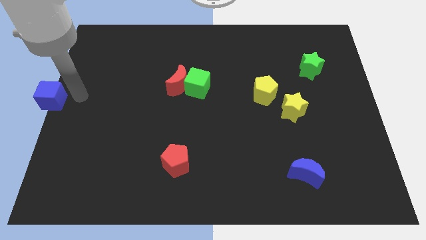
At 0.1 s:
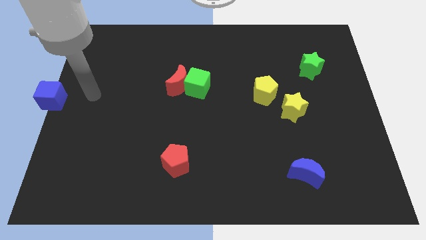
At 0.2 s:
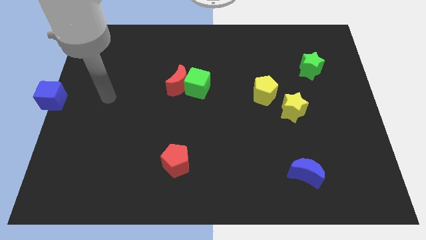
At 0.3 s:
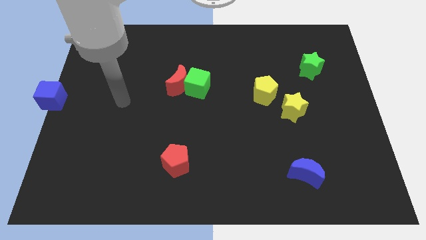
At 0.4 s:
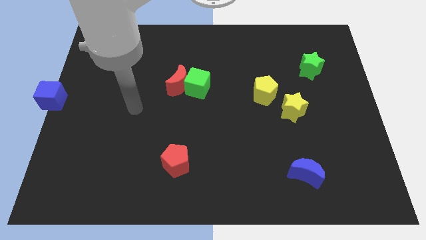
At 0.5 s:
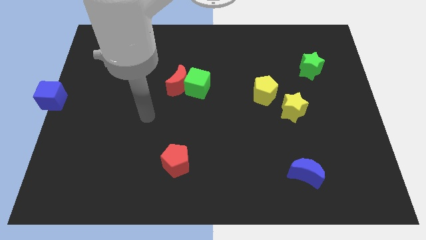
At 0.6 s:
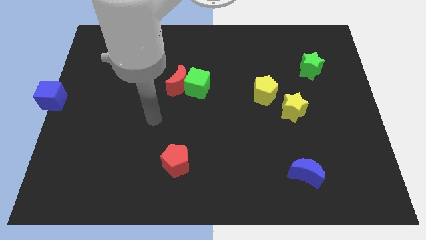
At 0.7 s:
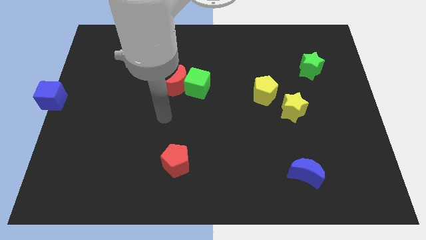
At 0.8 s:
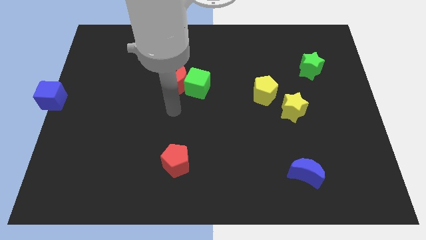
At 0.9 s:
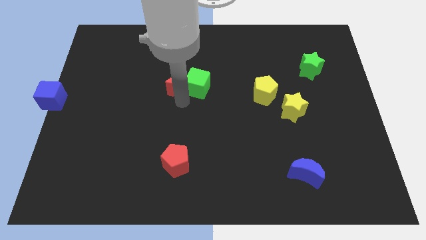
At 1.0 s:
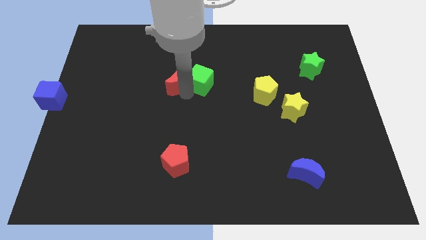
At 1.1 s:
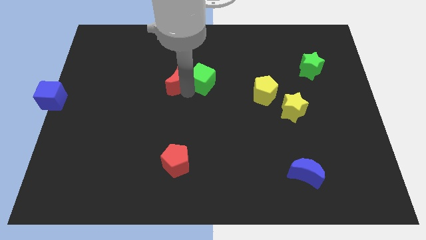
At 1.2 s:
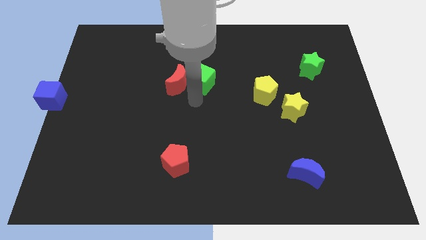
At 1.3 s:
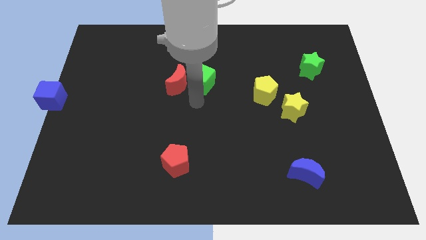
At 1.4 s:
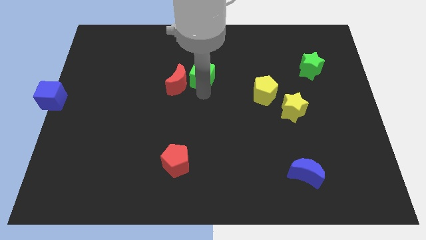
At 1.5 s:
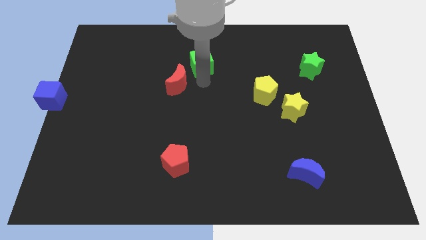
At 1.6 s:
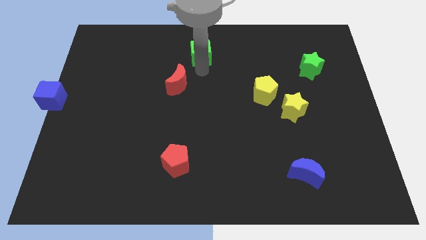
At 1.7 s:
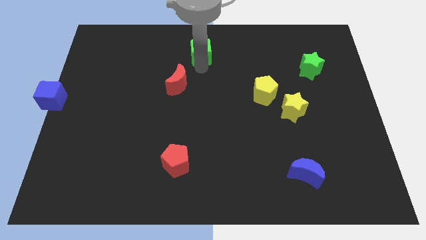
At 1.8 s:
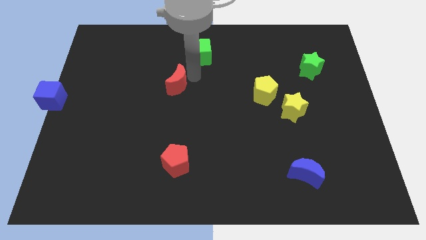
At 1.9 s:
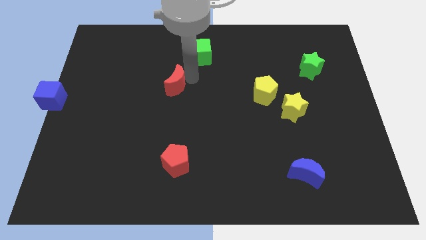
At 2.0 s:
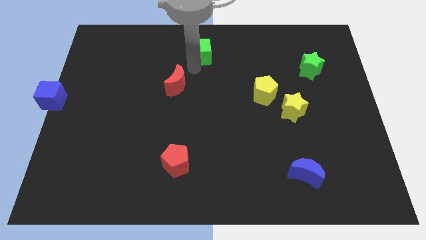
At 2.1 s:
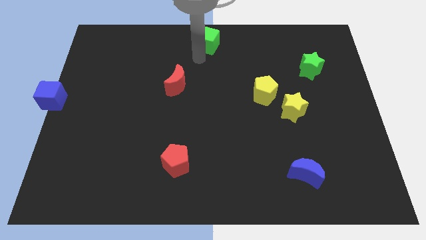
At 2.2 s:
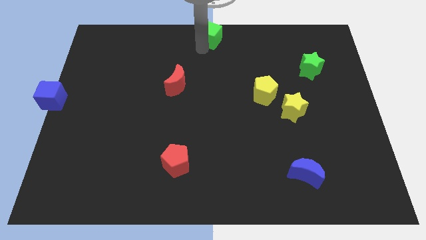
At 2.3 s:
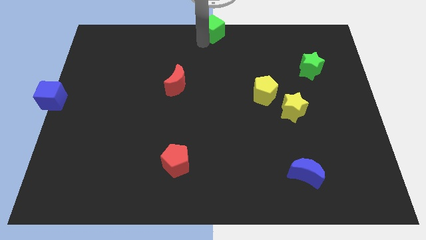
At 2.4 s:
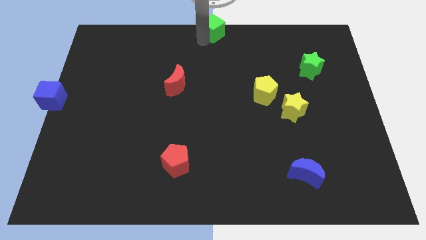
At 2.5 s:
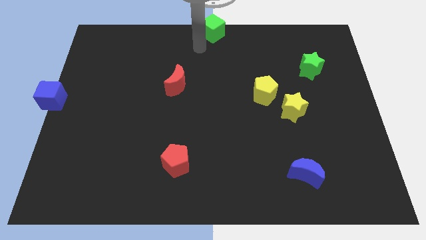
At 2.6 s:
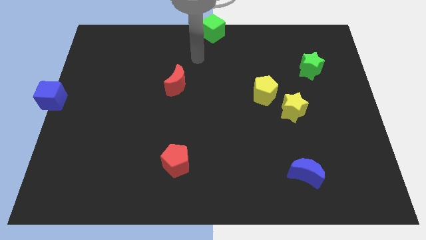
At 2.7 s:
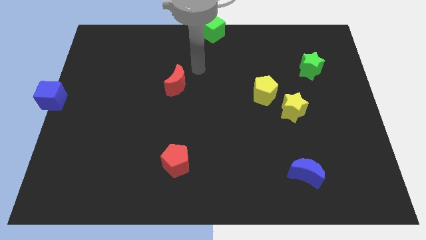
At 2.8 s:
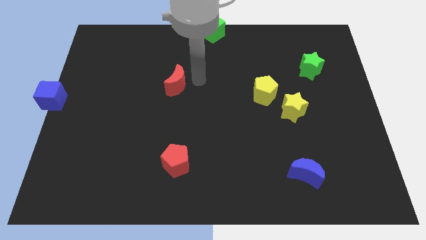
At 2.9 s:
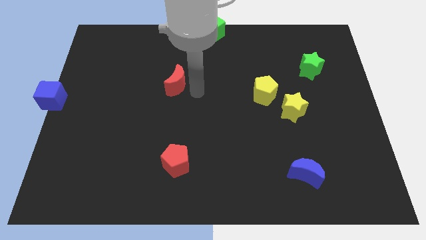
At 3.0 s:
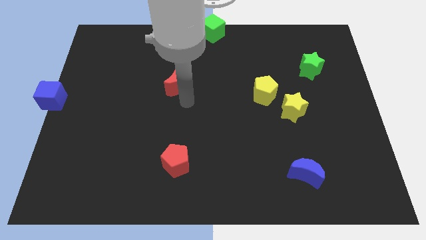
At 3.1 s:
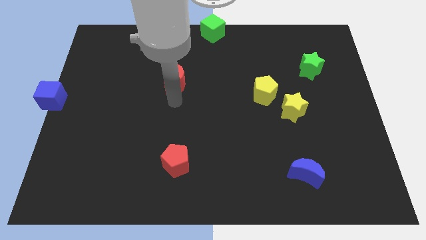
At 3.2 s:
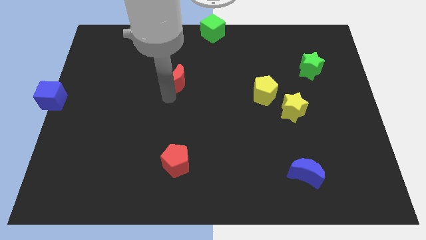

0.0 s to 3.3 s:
move the green cube to the top side center

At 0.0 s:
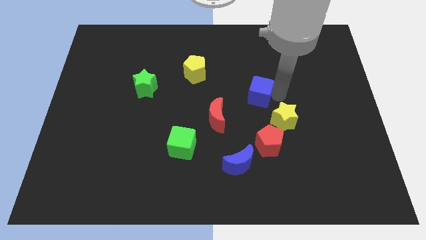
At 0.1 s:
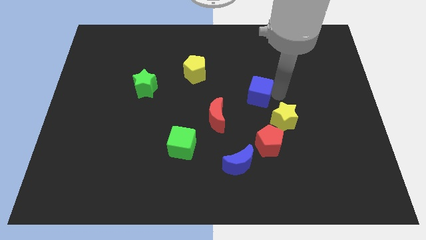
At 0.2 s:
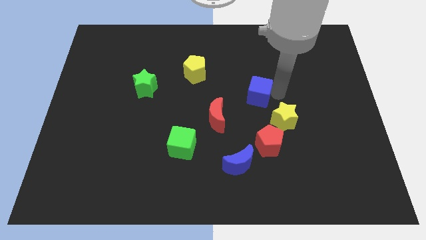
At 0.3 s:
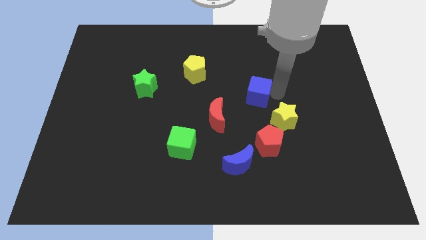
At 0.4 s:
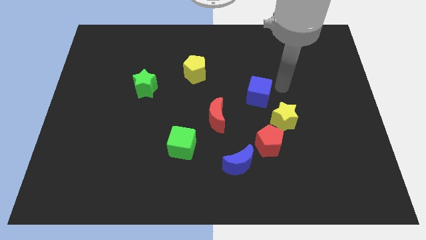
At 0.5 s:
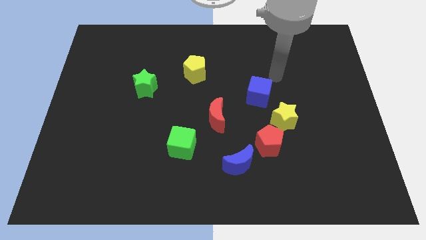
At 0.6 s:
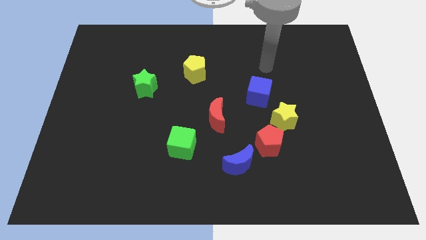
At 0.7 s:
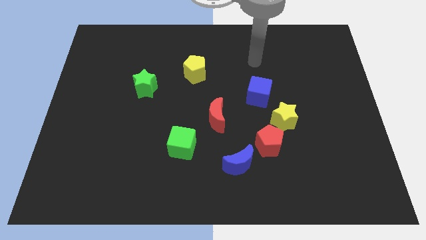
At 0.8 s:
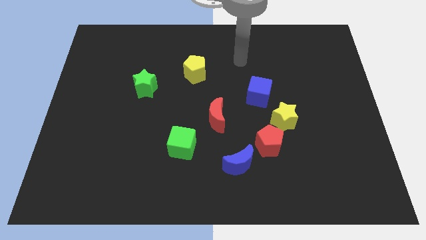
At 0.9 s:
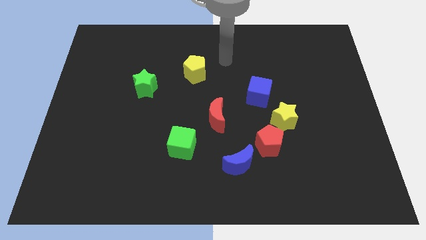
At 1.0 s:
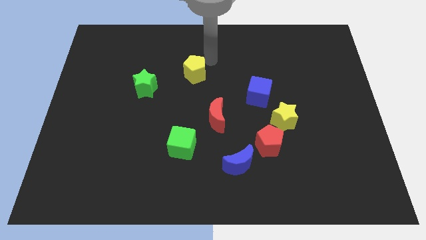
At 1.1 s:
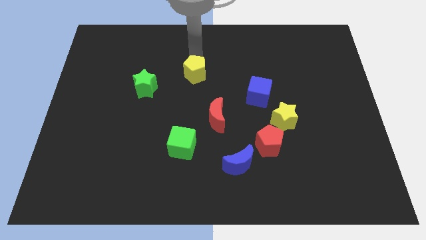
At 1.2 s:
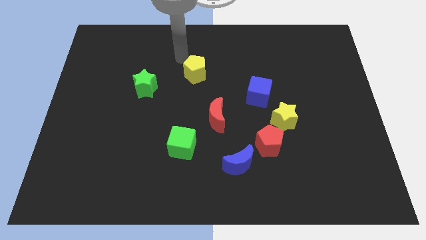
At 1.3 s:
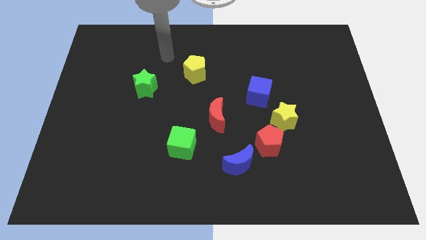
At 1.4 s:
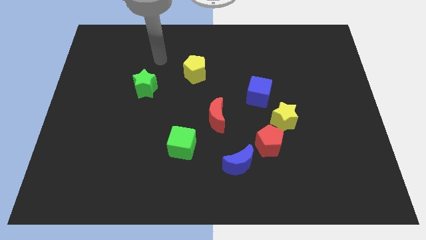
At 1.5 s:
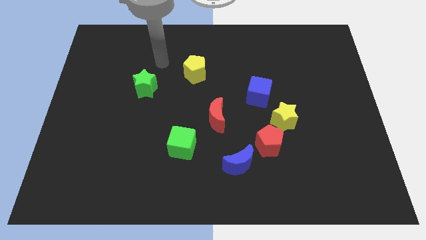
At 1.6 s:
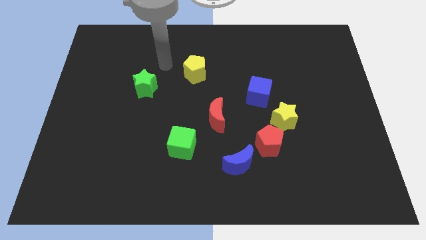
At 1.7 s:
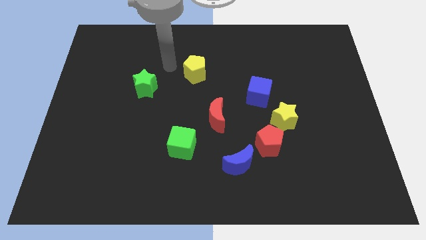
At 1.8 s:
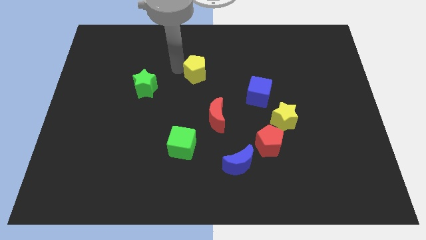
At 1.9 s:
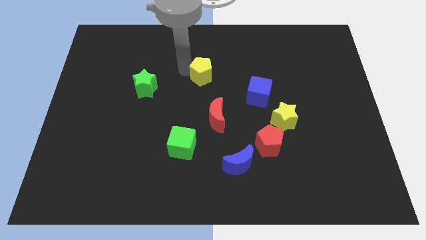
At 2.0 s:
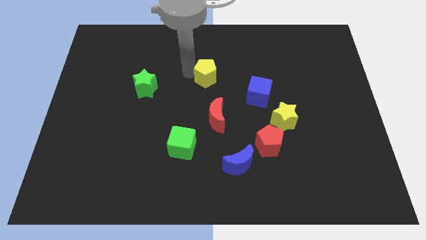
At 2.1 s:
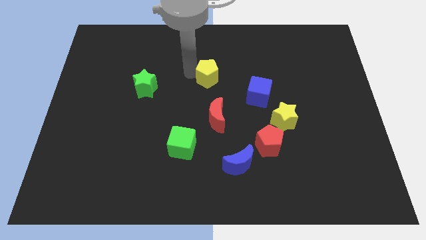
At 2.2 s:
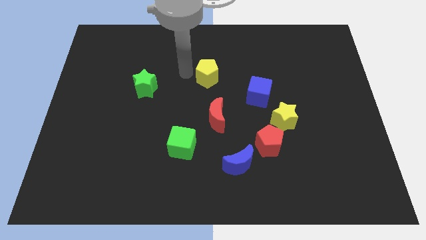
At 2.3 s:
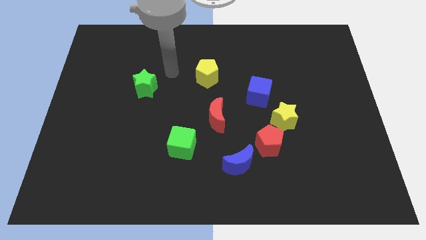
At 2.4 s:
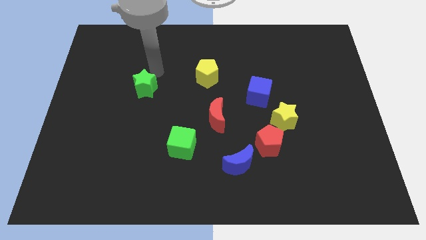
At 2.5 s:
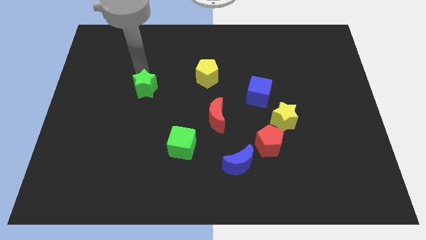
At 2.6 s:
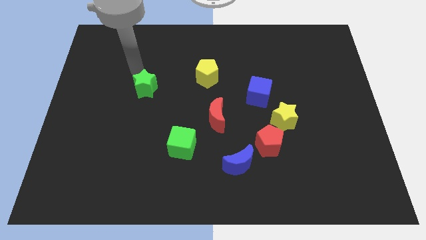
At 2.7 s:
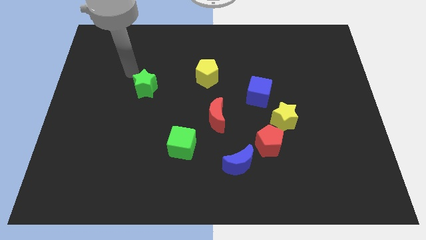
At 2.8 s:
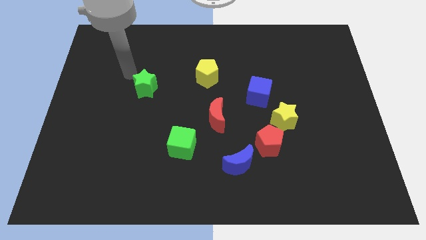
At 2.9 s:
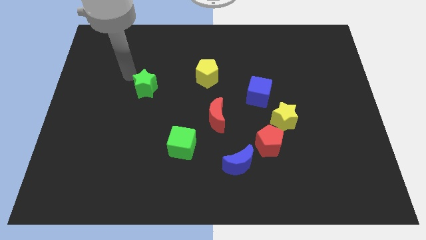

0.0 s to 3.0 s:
place yellow pentagon to the top of red moon

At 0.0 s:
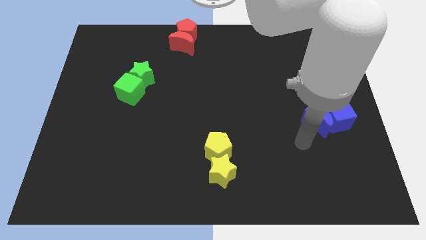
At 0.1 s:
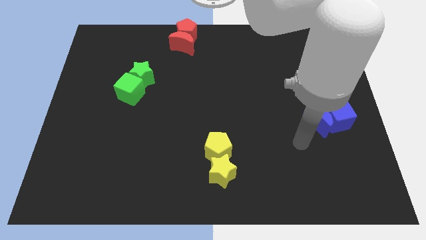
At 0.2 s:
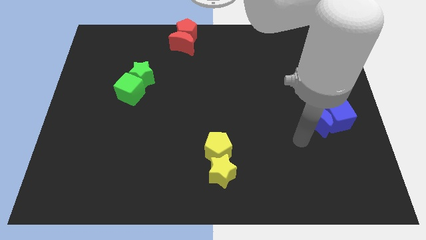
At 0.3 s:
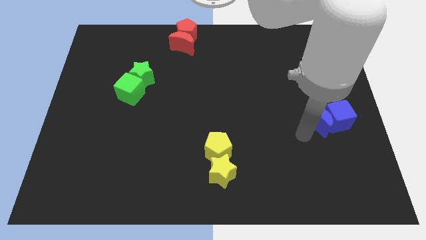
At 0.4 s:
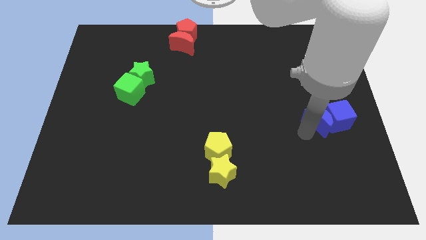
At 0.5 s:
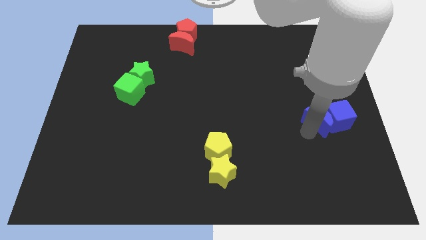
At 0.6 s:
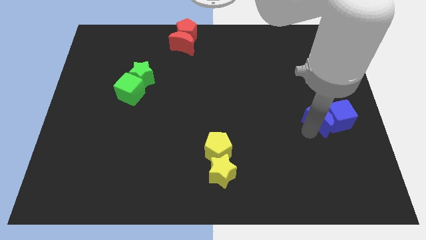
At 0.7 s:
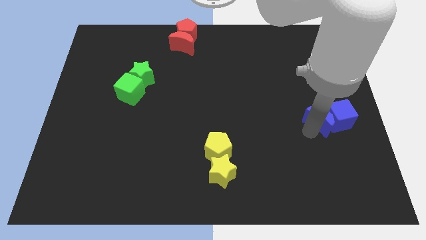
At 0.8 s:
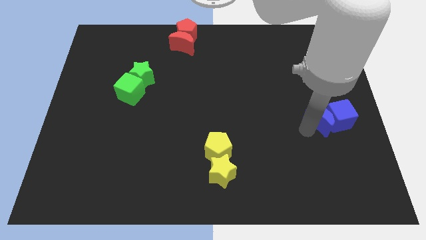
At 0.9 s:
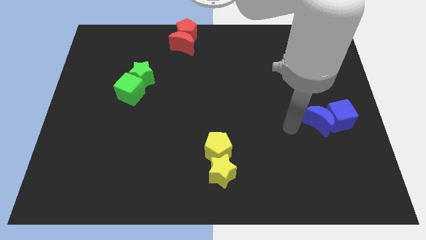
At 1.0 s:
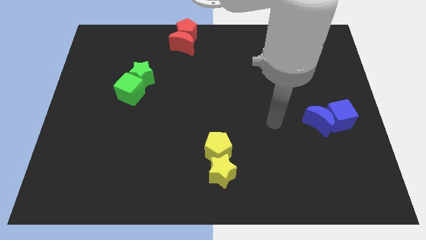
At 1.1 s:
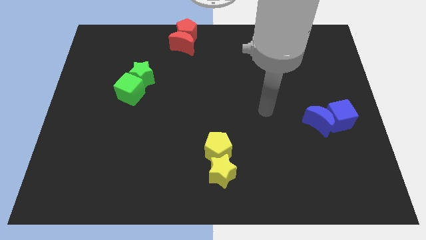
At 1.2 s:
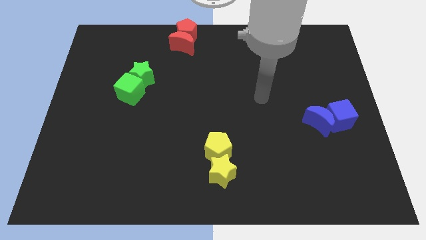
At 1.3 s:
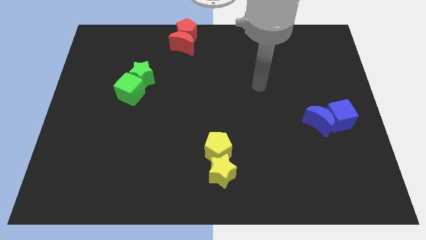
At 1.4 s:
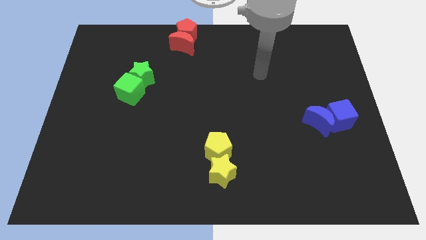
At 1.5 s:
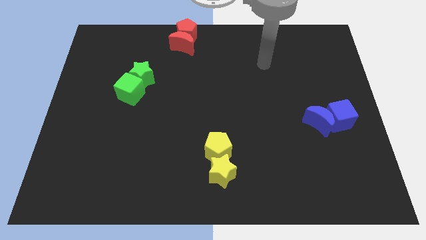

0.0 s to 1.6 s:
push the blue crescent and blue cube towards the center right of the board

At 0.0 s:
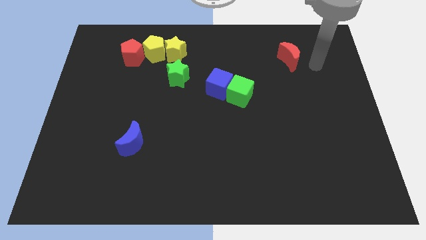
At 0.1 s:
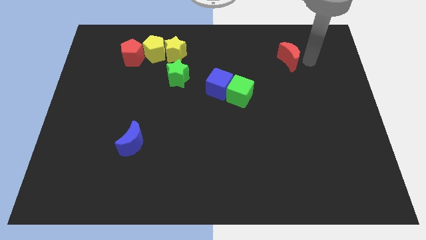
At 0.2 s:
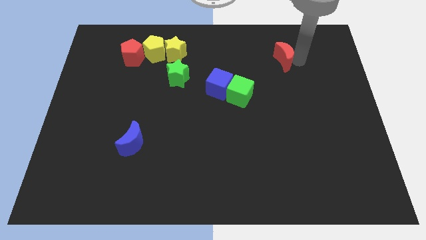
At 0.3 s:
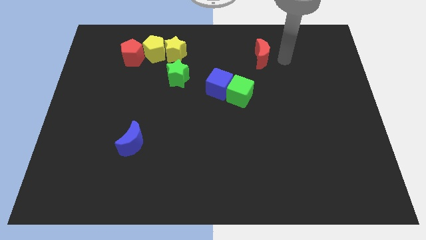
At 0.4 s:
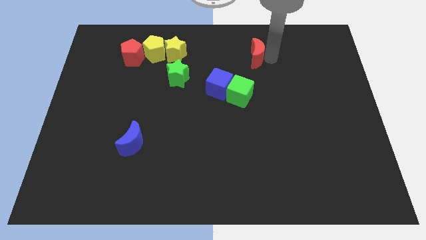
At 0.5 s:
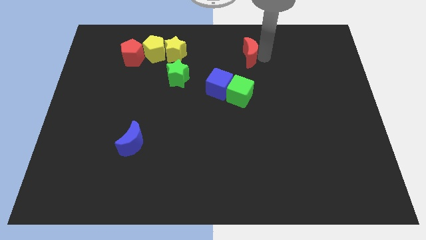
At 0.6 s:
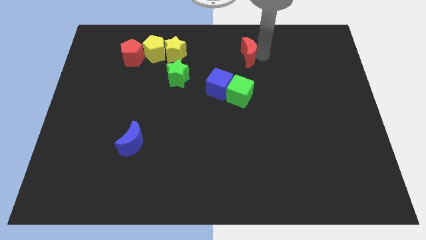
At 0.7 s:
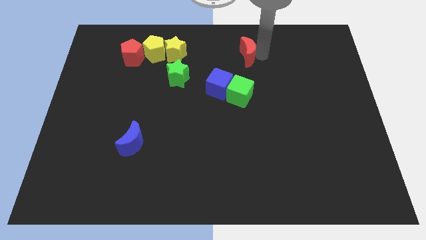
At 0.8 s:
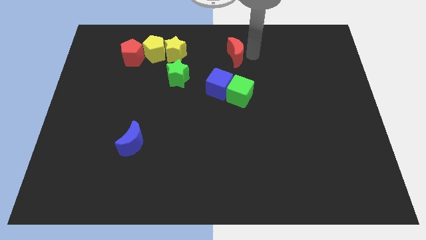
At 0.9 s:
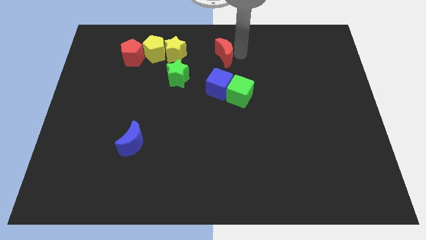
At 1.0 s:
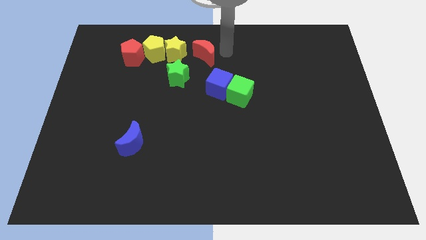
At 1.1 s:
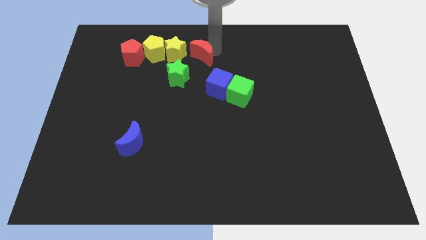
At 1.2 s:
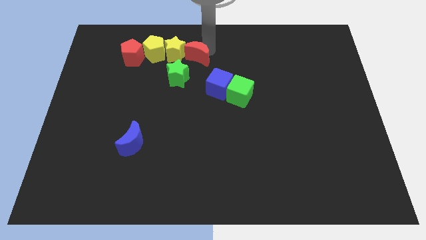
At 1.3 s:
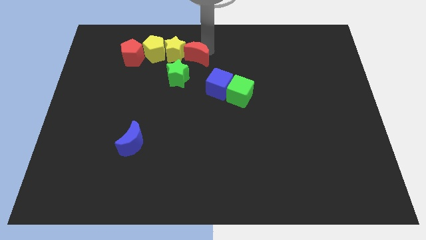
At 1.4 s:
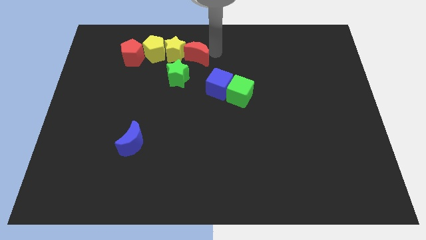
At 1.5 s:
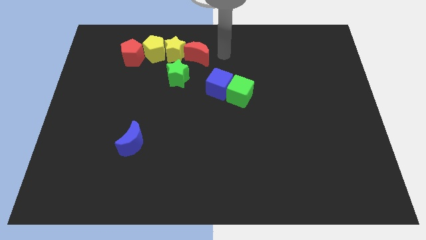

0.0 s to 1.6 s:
move the red crescent to the right side of the yellow star
